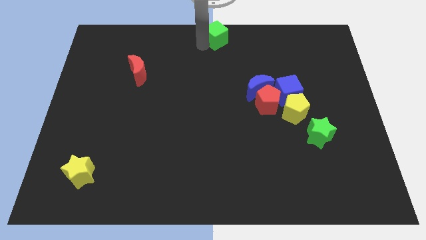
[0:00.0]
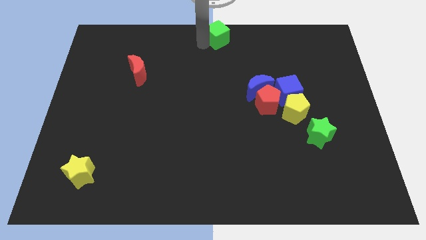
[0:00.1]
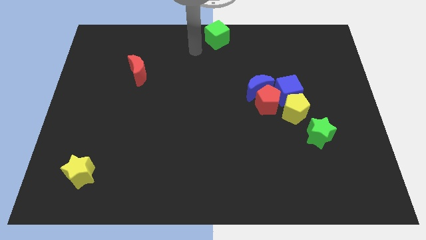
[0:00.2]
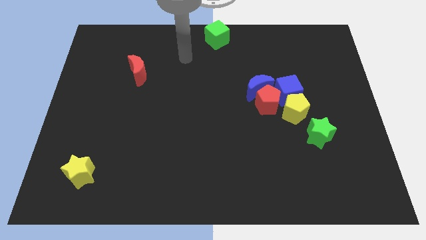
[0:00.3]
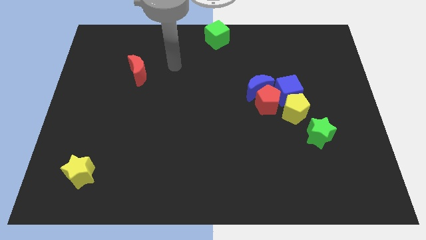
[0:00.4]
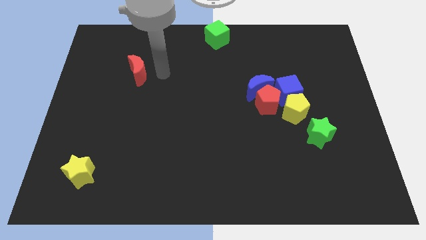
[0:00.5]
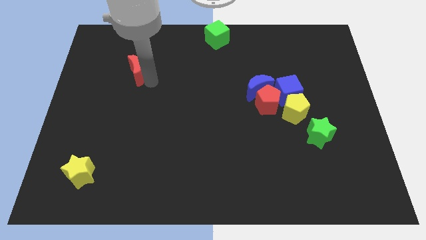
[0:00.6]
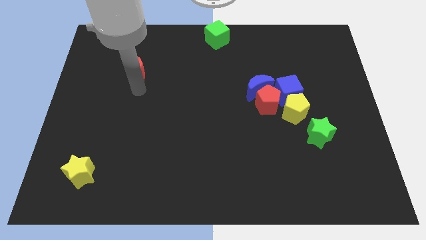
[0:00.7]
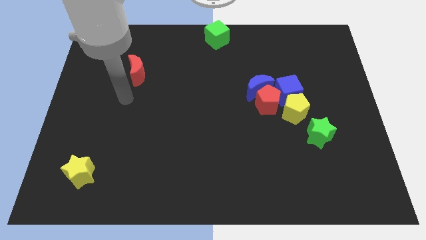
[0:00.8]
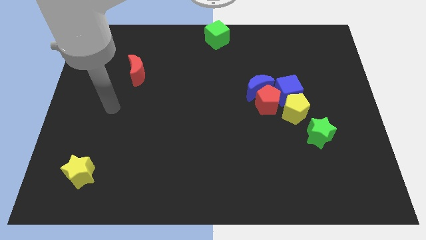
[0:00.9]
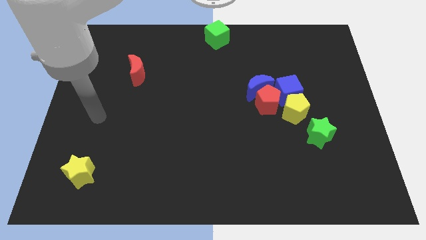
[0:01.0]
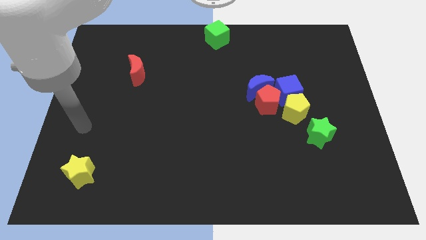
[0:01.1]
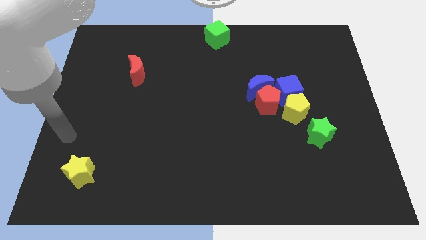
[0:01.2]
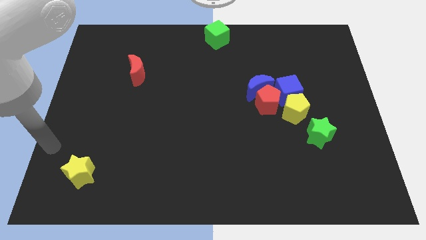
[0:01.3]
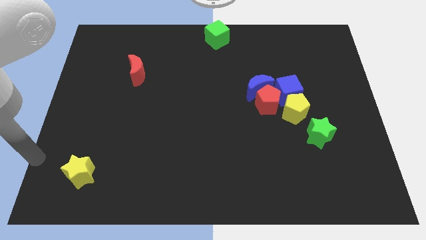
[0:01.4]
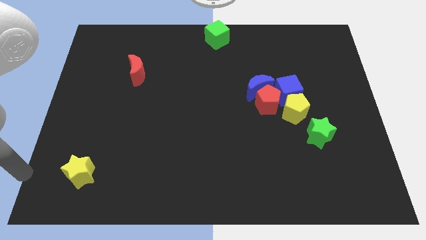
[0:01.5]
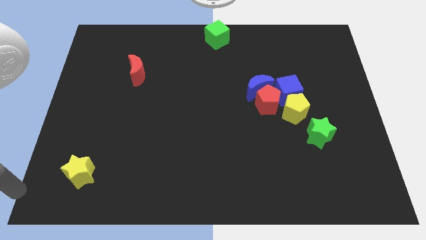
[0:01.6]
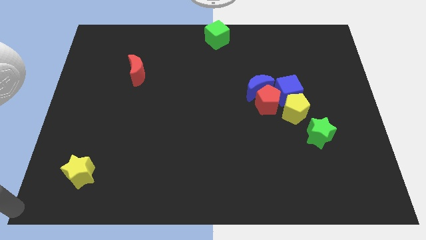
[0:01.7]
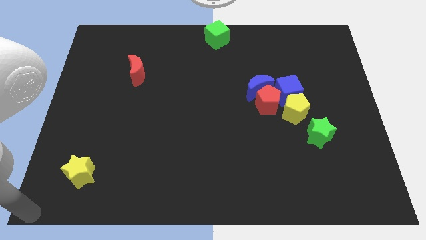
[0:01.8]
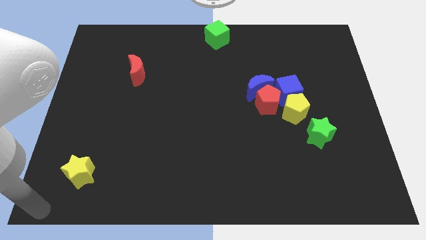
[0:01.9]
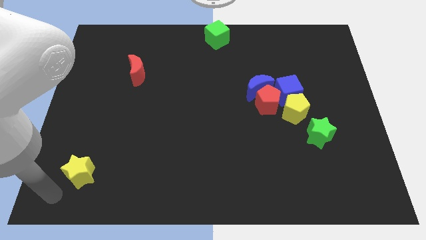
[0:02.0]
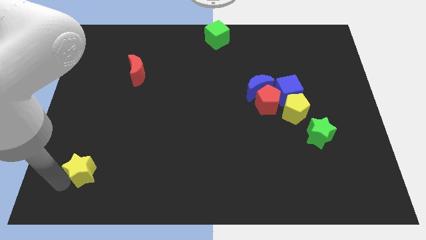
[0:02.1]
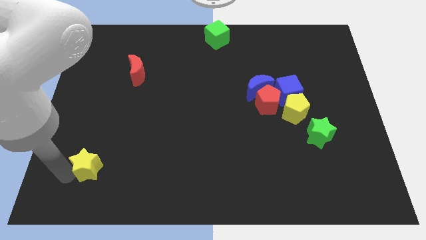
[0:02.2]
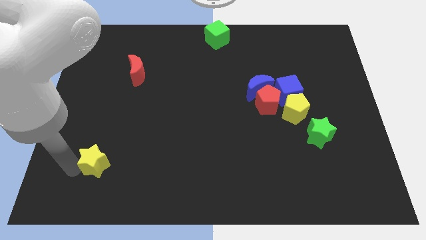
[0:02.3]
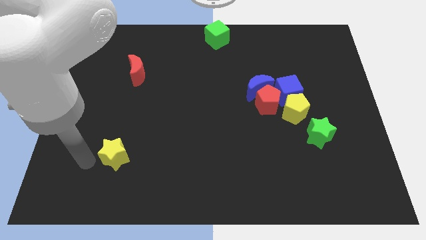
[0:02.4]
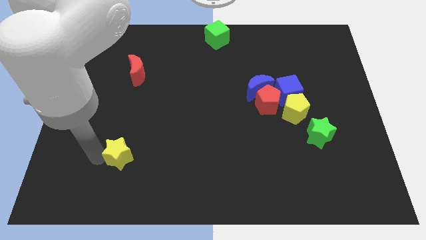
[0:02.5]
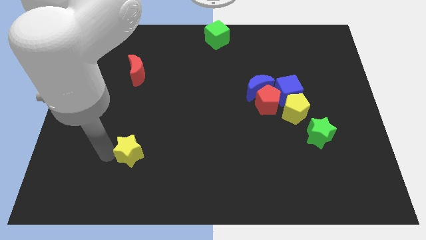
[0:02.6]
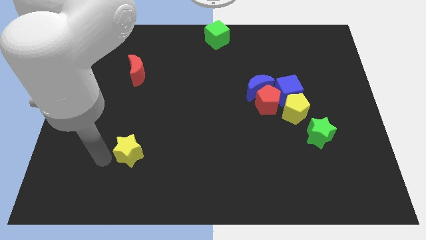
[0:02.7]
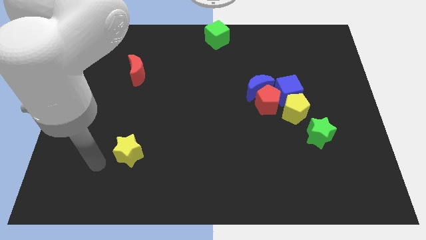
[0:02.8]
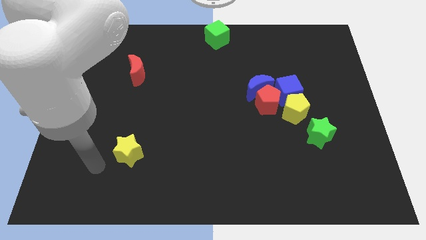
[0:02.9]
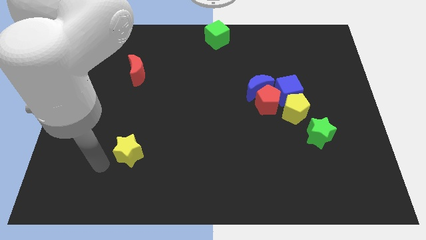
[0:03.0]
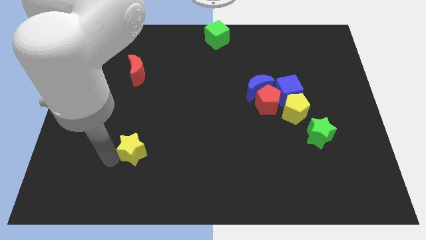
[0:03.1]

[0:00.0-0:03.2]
place the yellow star vertically below the red moon

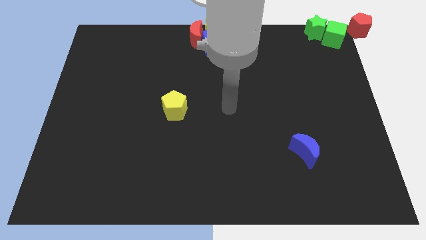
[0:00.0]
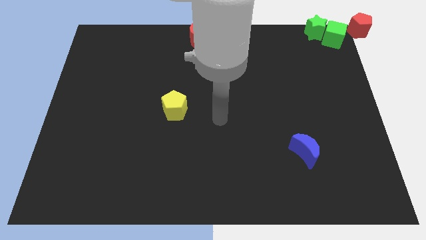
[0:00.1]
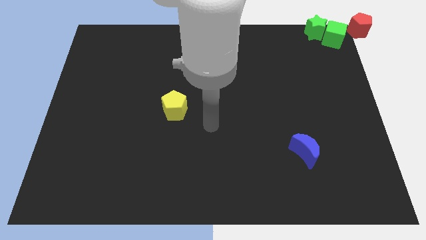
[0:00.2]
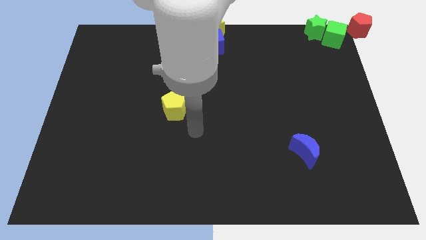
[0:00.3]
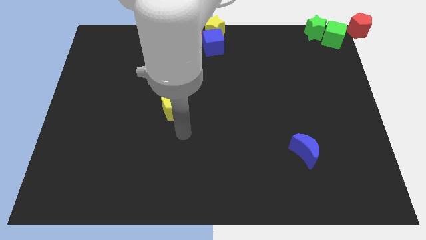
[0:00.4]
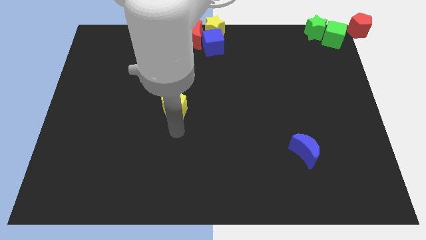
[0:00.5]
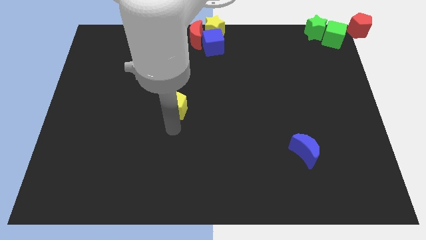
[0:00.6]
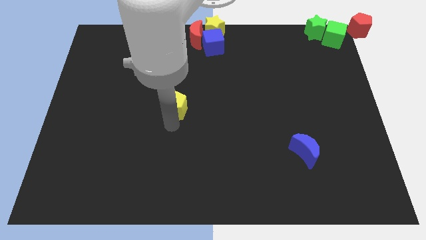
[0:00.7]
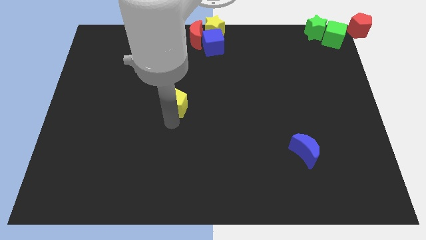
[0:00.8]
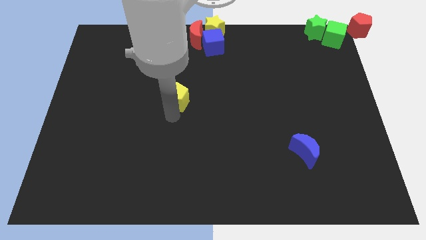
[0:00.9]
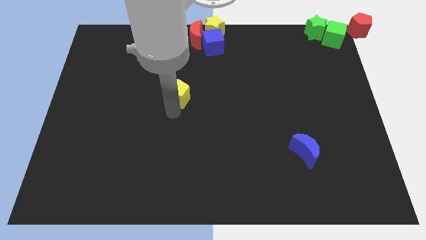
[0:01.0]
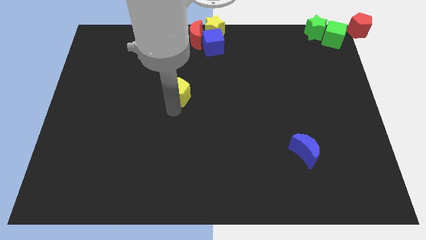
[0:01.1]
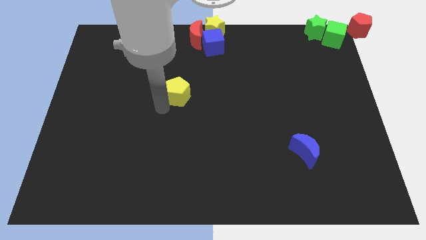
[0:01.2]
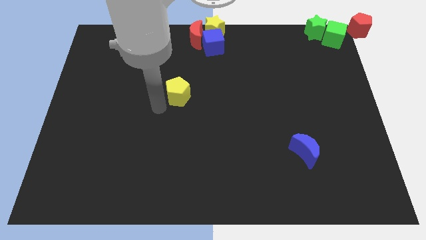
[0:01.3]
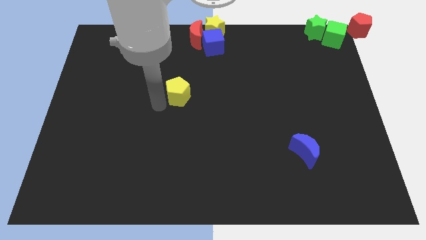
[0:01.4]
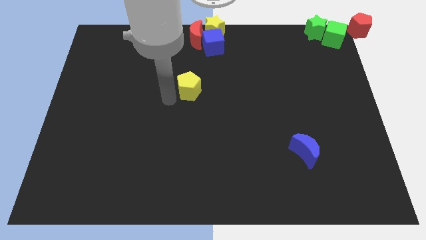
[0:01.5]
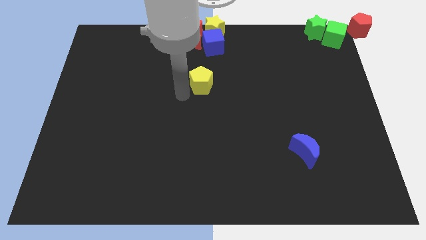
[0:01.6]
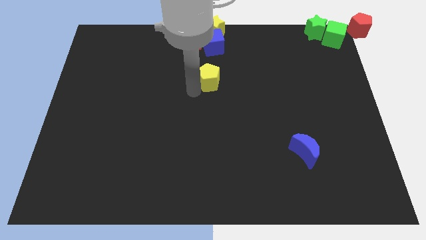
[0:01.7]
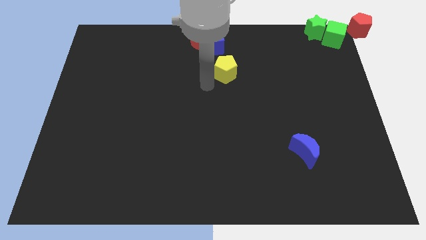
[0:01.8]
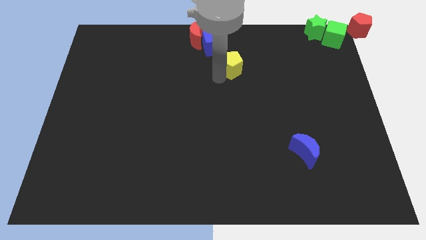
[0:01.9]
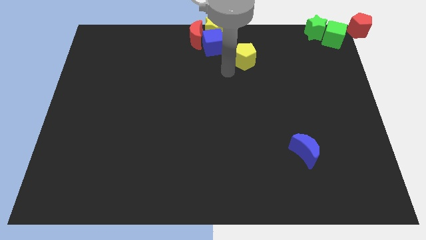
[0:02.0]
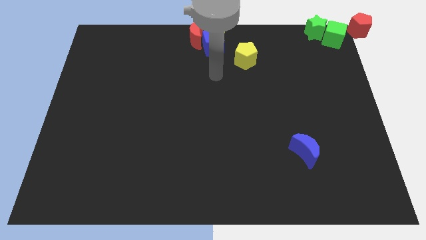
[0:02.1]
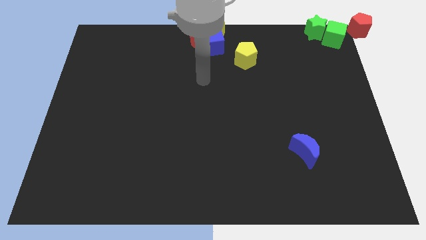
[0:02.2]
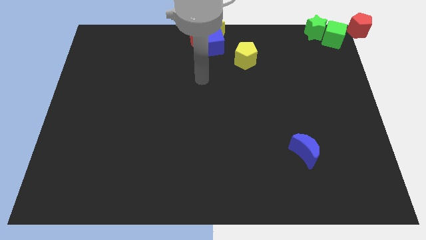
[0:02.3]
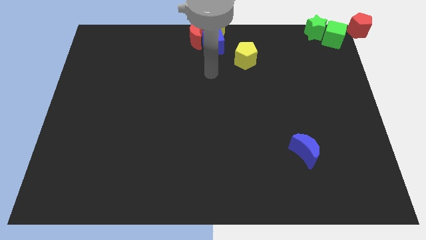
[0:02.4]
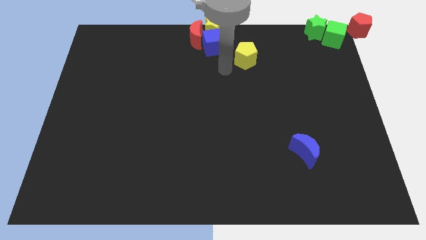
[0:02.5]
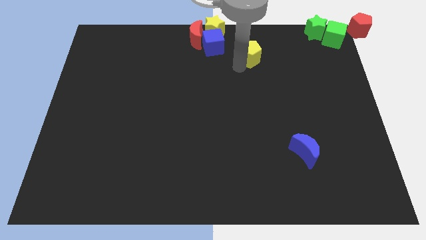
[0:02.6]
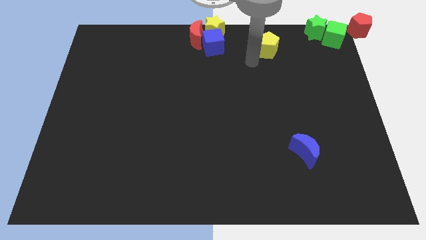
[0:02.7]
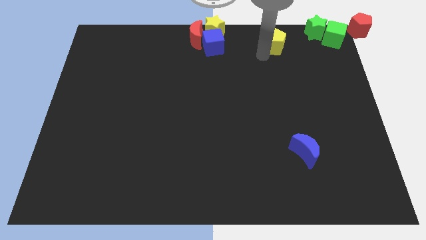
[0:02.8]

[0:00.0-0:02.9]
place yellow pentagon parallel to blue cube

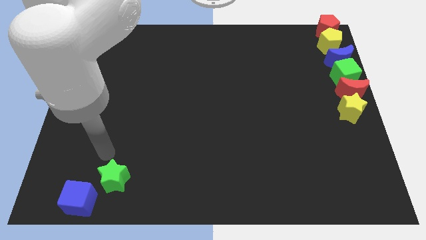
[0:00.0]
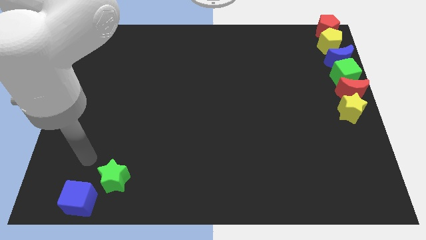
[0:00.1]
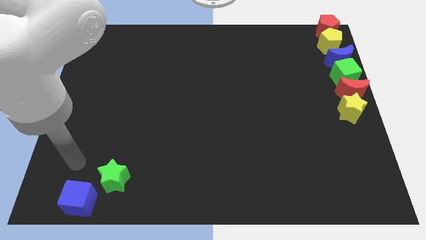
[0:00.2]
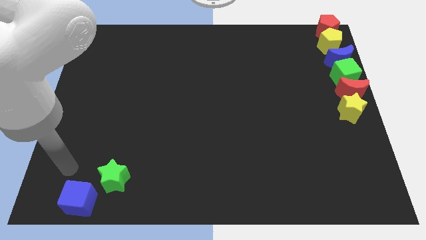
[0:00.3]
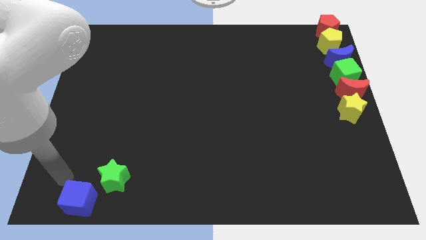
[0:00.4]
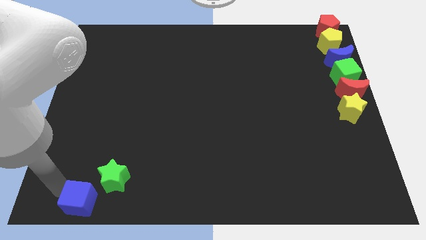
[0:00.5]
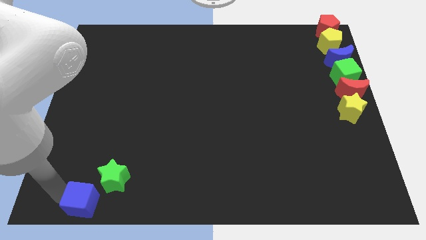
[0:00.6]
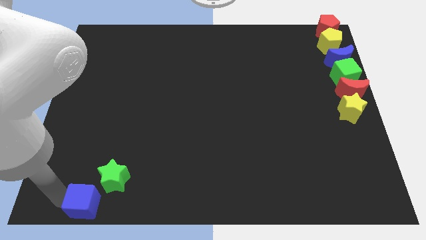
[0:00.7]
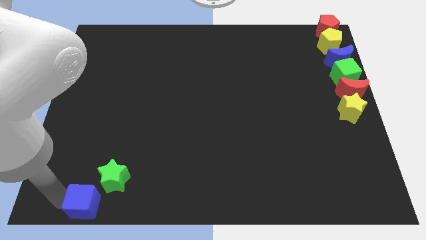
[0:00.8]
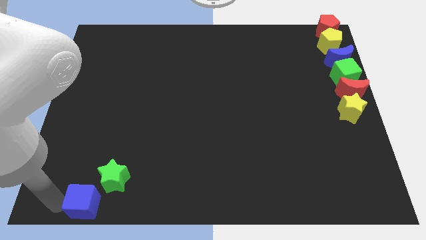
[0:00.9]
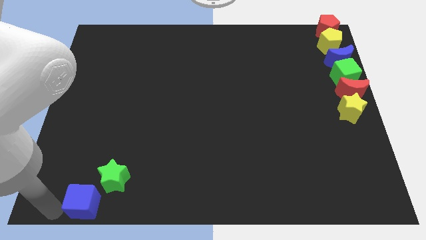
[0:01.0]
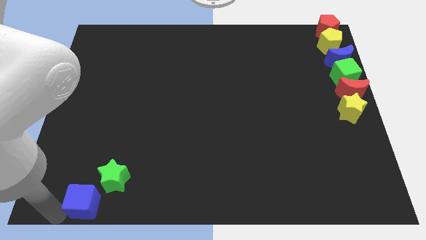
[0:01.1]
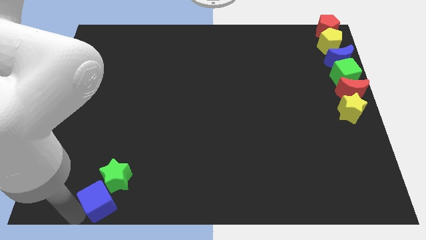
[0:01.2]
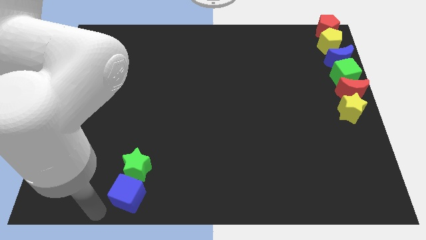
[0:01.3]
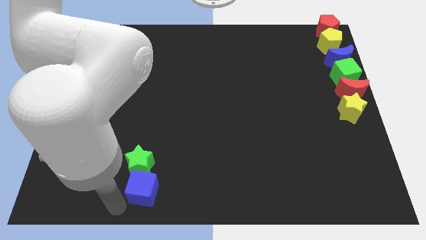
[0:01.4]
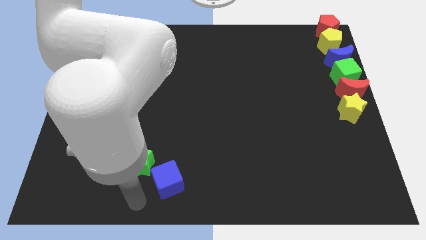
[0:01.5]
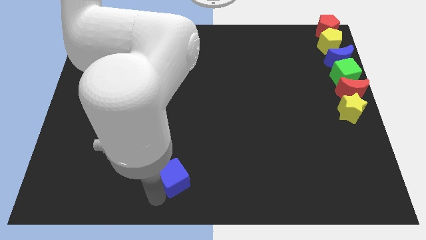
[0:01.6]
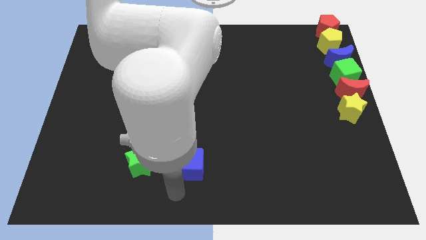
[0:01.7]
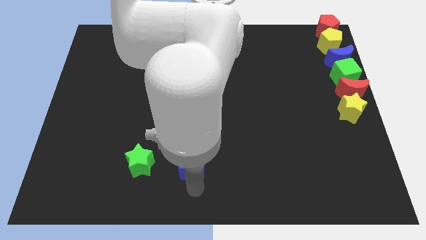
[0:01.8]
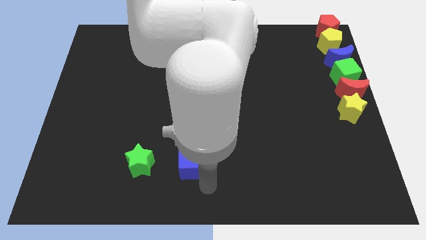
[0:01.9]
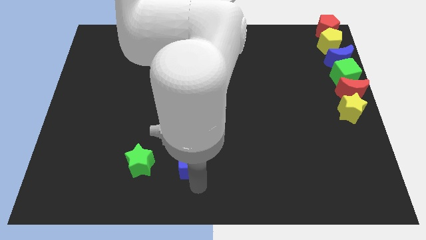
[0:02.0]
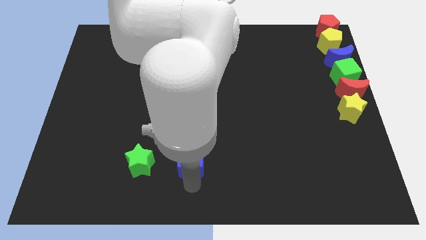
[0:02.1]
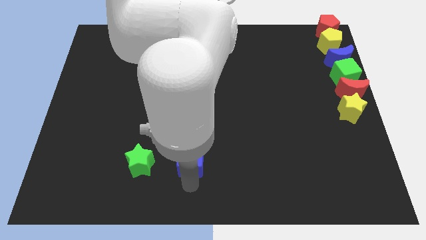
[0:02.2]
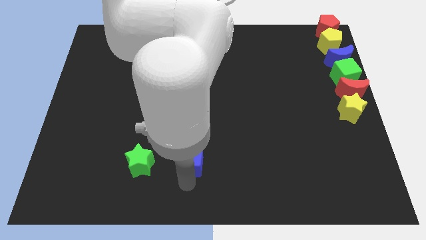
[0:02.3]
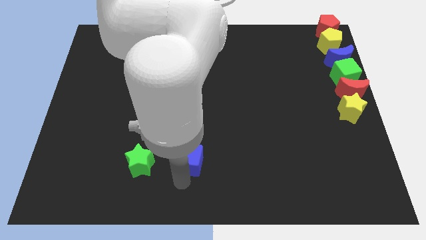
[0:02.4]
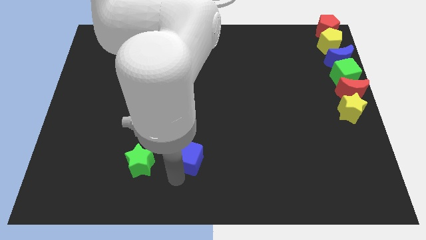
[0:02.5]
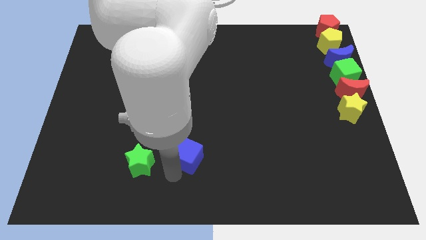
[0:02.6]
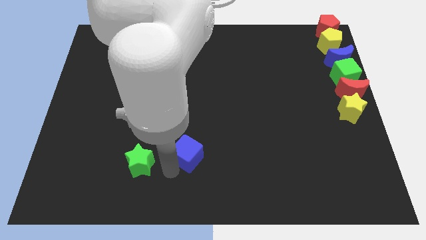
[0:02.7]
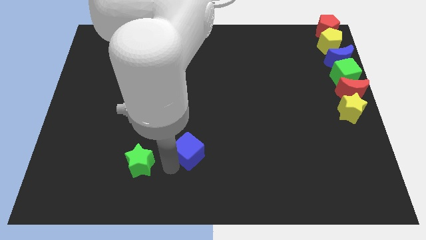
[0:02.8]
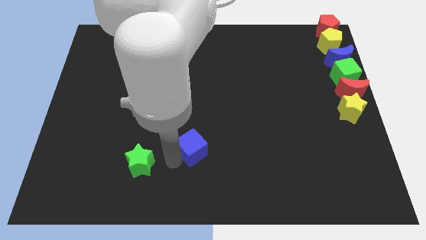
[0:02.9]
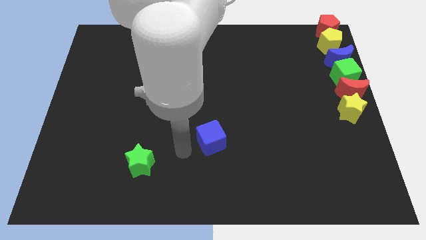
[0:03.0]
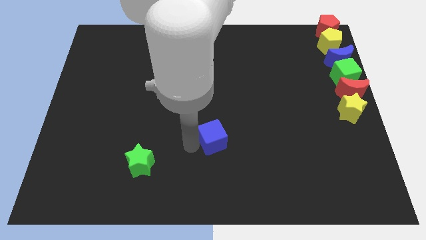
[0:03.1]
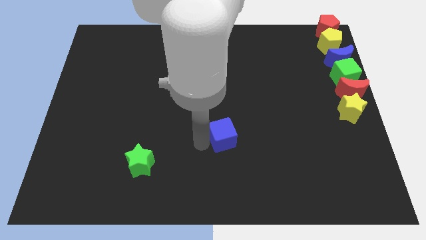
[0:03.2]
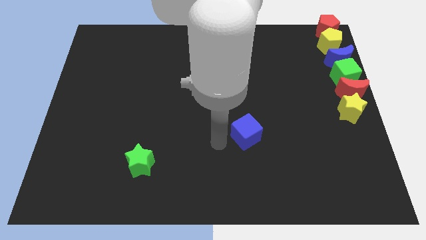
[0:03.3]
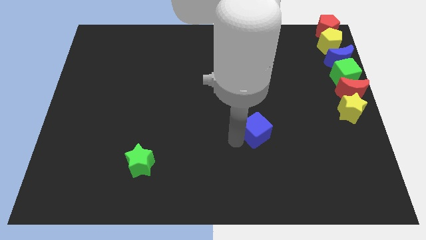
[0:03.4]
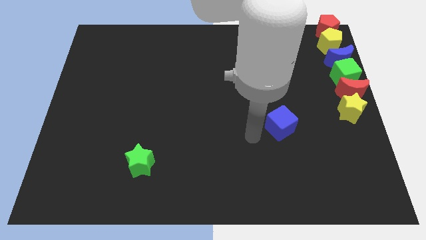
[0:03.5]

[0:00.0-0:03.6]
move the blue cube towards center
